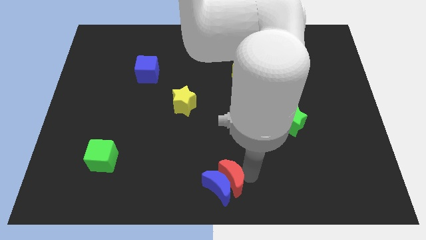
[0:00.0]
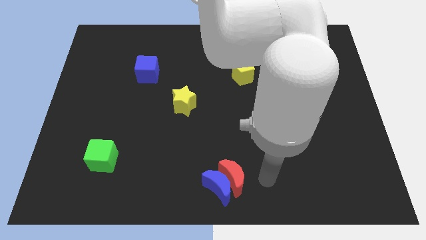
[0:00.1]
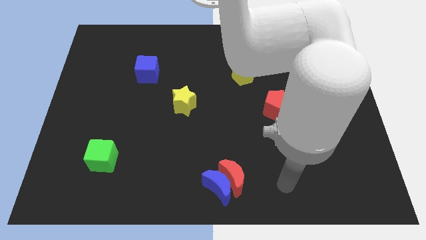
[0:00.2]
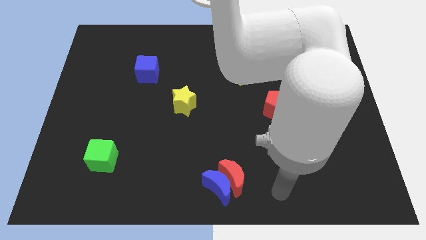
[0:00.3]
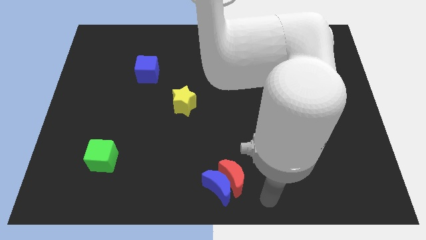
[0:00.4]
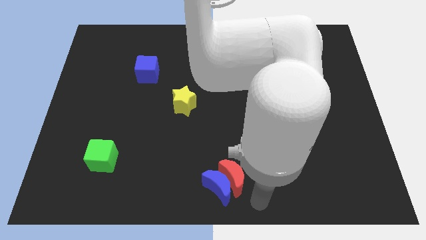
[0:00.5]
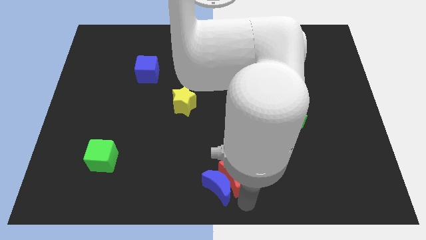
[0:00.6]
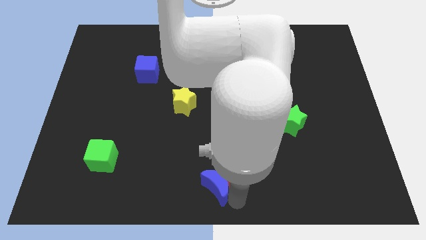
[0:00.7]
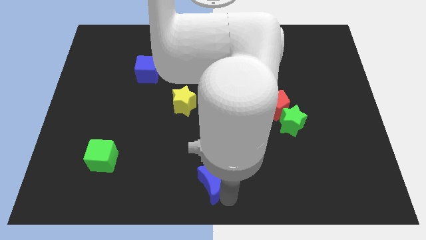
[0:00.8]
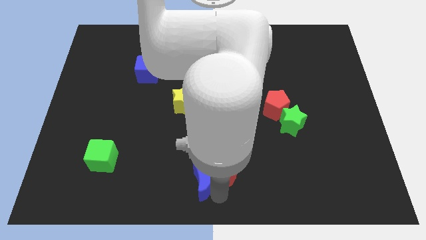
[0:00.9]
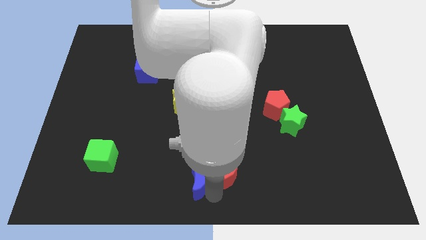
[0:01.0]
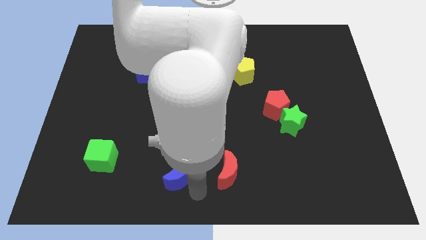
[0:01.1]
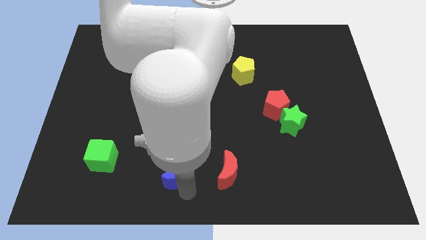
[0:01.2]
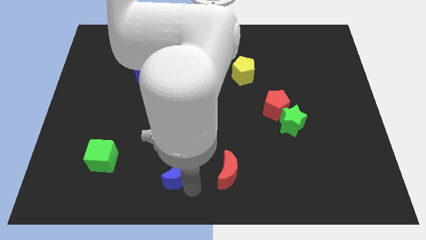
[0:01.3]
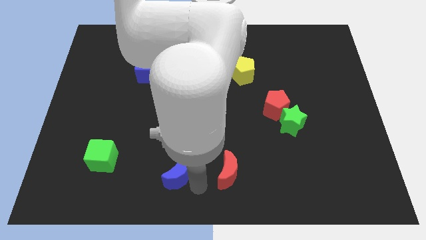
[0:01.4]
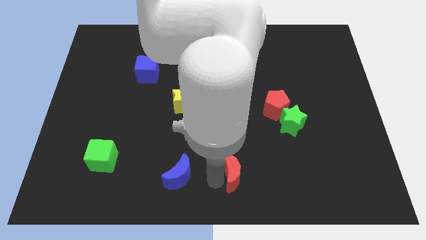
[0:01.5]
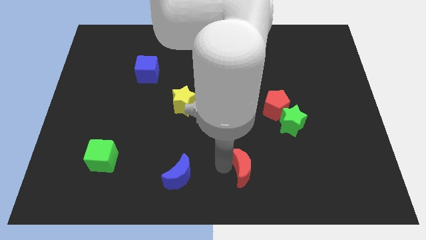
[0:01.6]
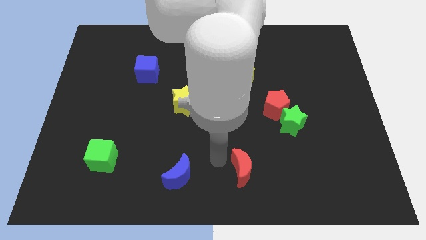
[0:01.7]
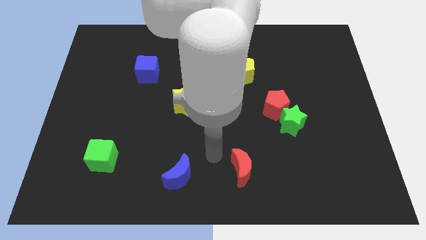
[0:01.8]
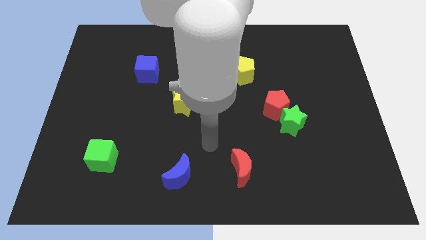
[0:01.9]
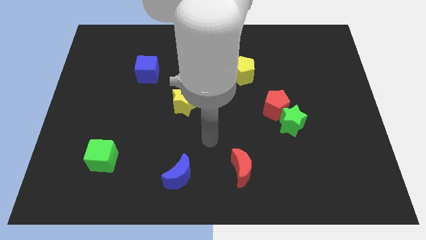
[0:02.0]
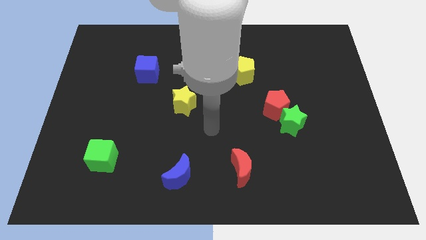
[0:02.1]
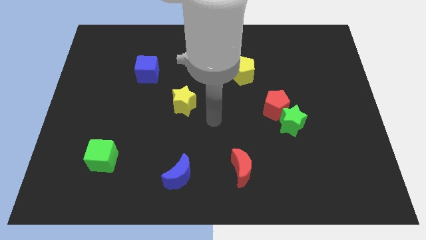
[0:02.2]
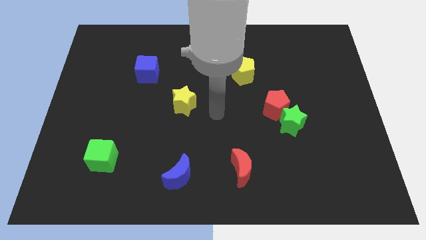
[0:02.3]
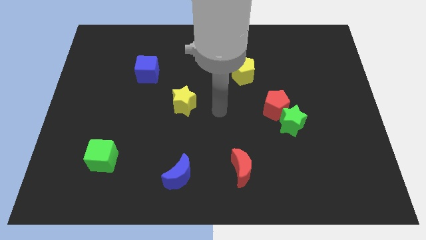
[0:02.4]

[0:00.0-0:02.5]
separate the blue moon and red moon at the bottom center

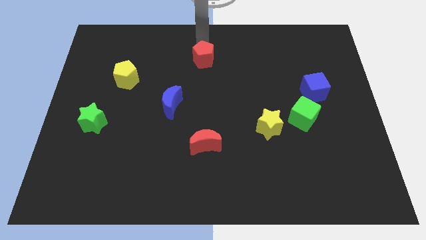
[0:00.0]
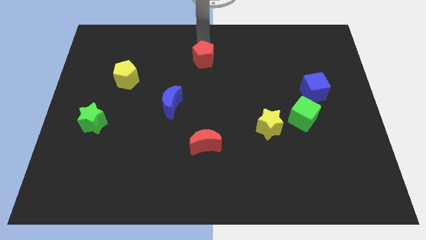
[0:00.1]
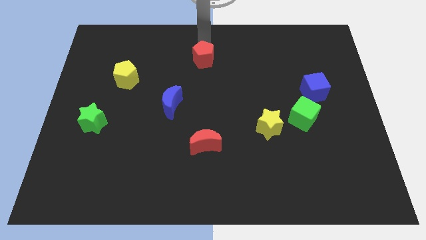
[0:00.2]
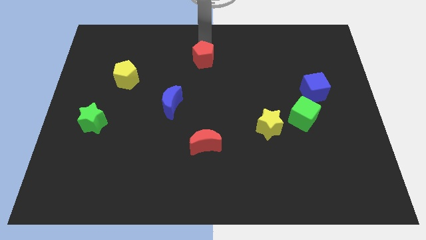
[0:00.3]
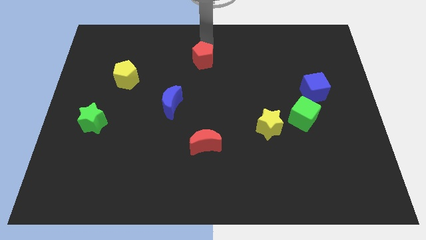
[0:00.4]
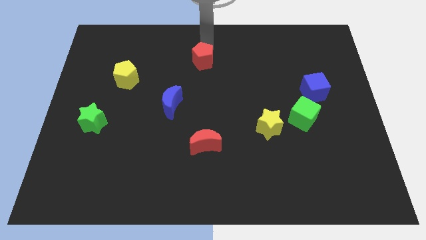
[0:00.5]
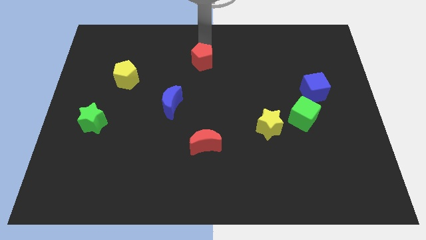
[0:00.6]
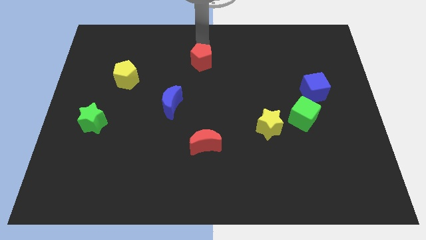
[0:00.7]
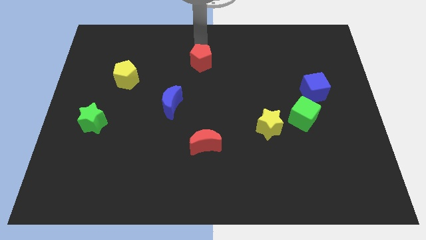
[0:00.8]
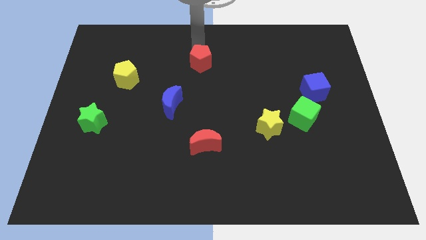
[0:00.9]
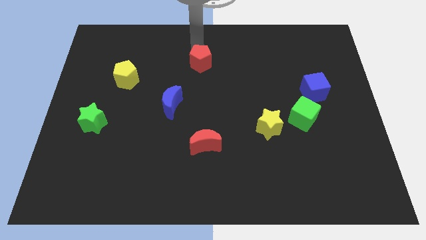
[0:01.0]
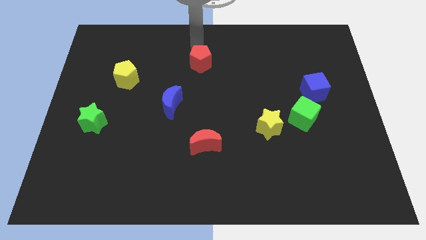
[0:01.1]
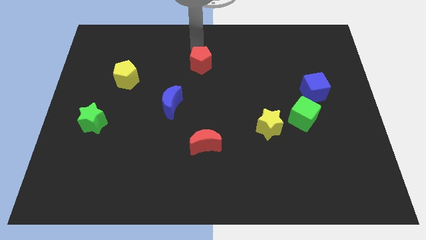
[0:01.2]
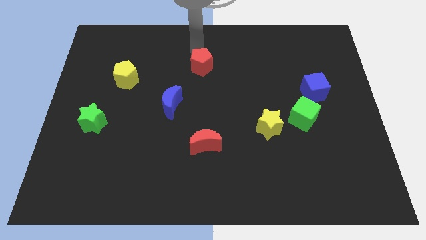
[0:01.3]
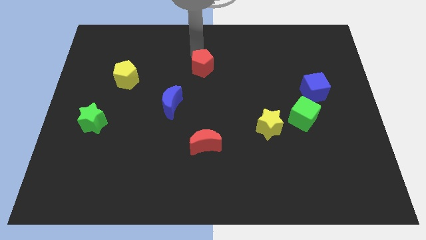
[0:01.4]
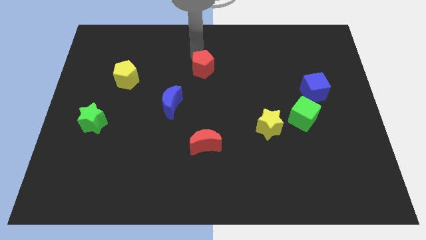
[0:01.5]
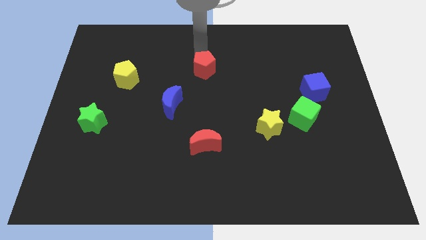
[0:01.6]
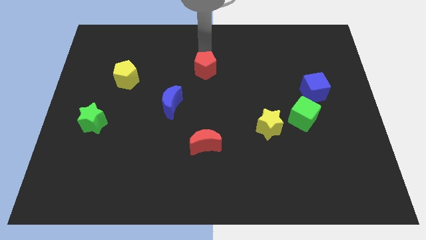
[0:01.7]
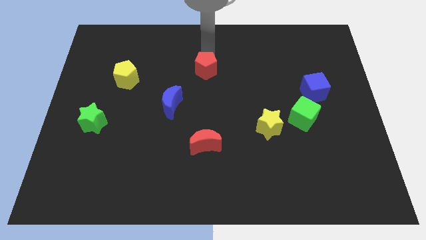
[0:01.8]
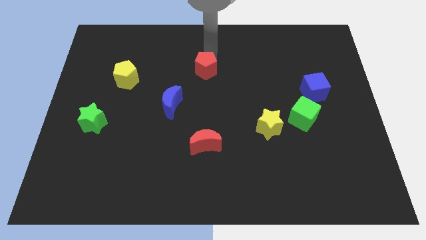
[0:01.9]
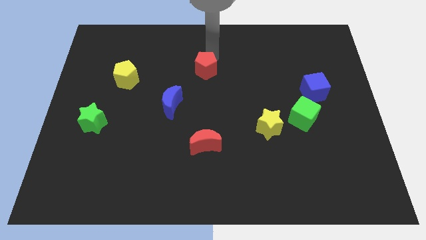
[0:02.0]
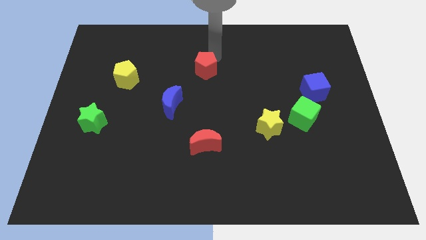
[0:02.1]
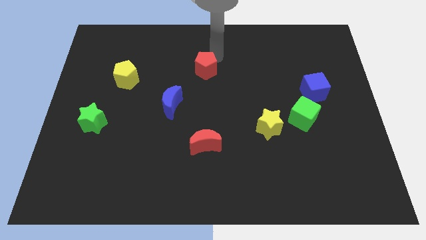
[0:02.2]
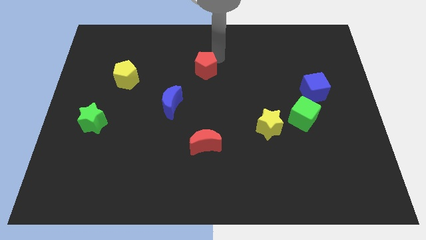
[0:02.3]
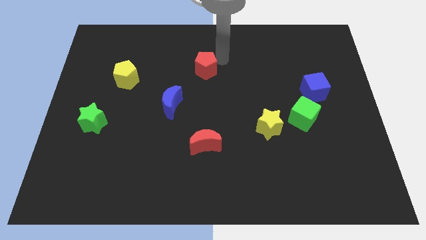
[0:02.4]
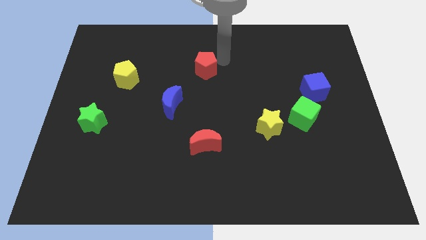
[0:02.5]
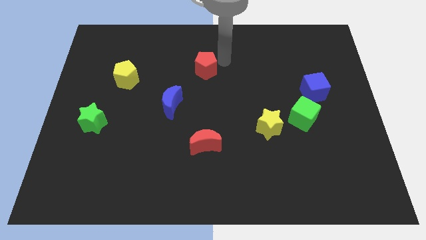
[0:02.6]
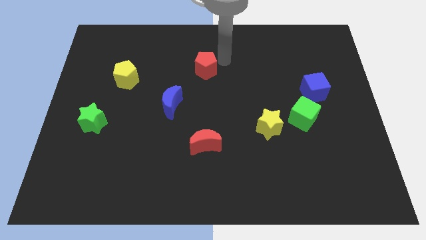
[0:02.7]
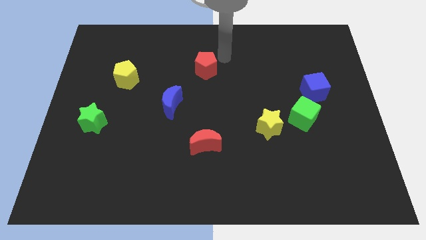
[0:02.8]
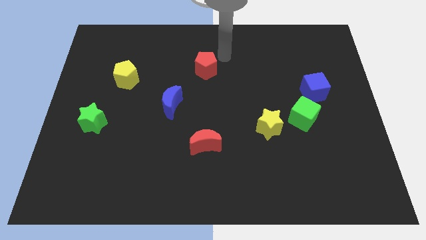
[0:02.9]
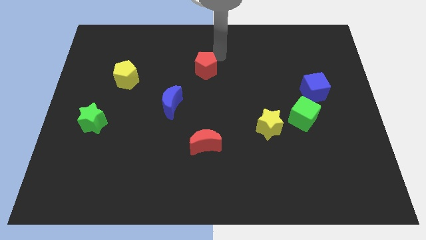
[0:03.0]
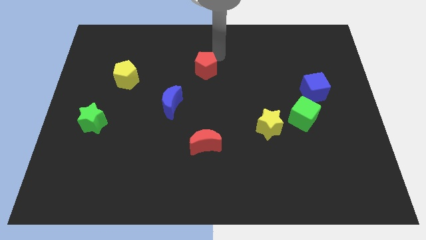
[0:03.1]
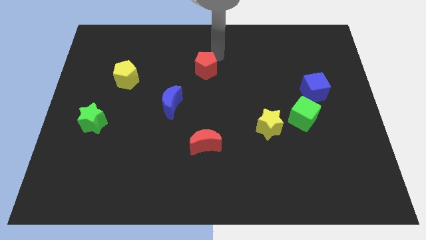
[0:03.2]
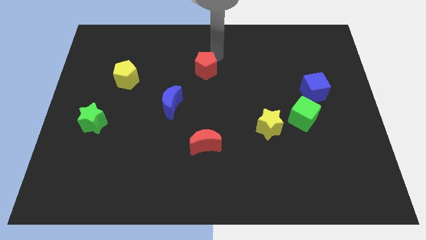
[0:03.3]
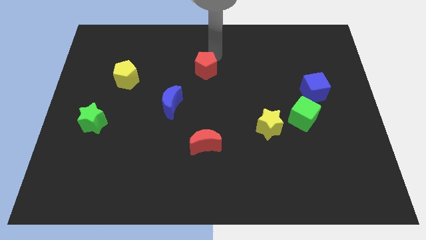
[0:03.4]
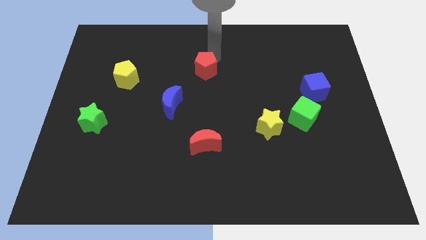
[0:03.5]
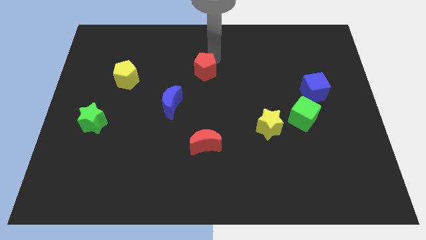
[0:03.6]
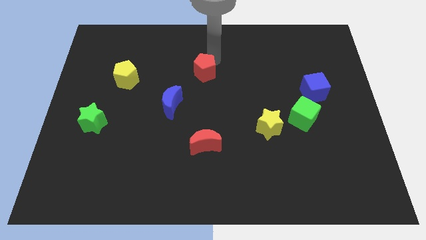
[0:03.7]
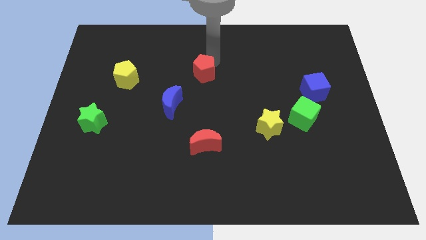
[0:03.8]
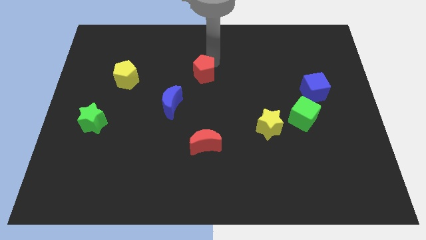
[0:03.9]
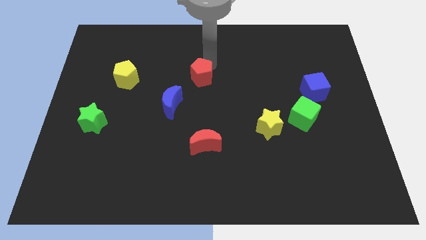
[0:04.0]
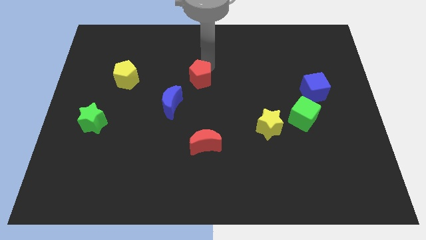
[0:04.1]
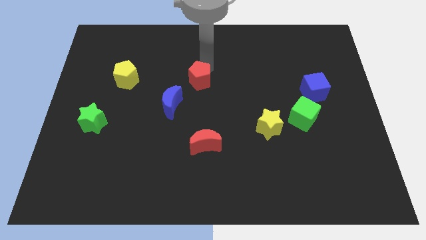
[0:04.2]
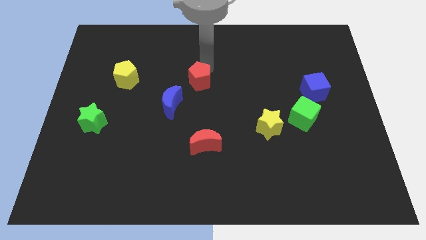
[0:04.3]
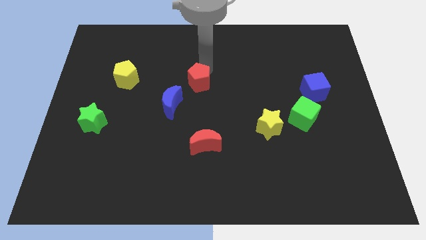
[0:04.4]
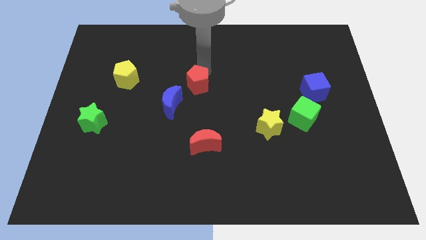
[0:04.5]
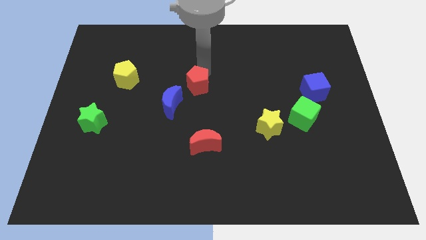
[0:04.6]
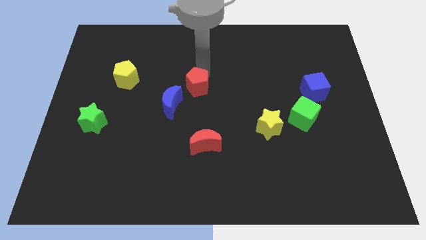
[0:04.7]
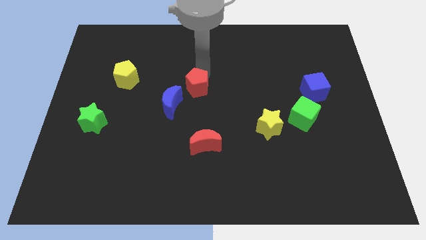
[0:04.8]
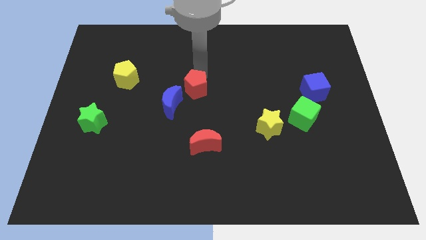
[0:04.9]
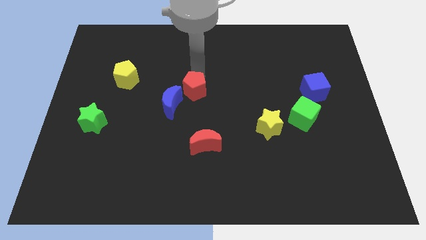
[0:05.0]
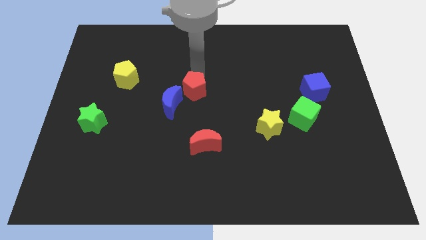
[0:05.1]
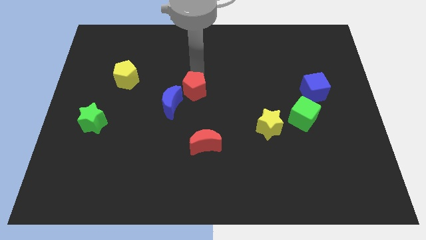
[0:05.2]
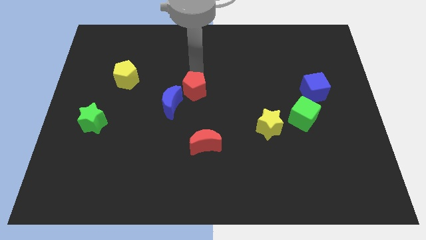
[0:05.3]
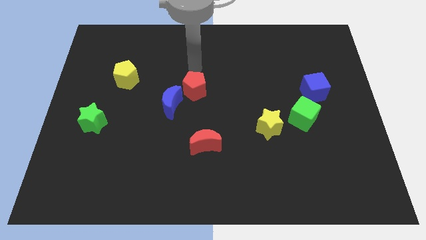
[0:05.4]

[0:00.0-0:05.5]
place the red pentagon close to the blue crescent

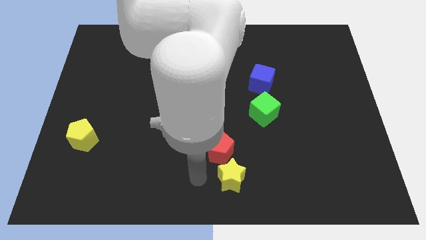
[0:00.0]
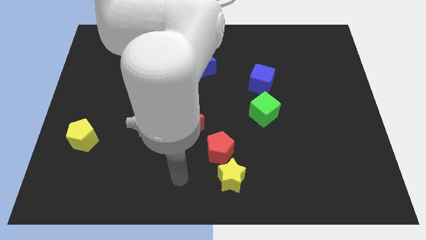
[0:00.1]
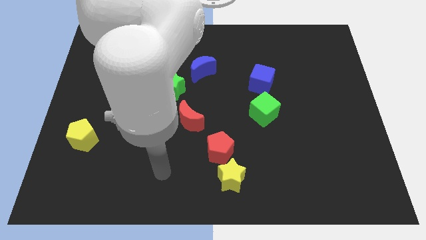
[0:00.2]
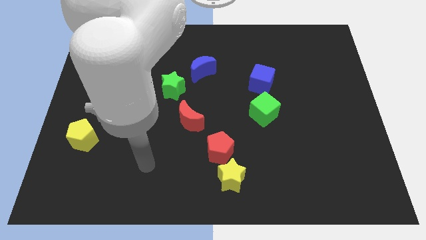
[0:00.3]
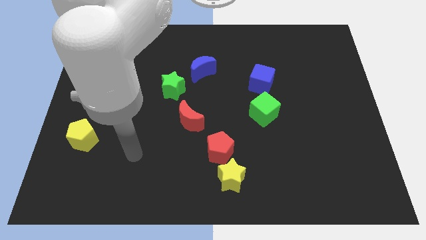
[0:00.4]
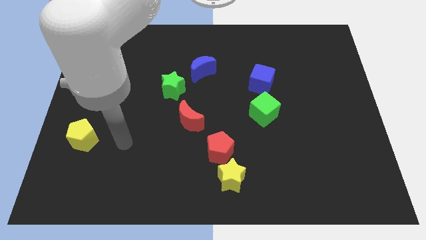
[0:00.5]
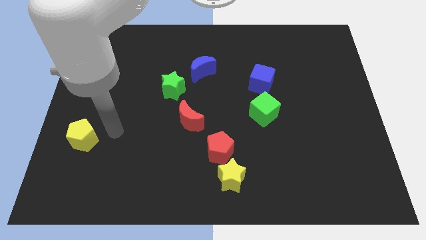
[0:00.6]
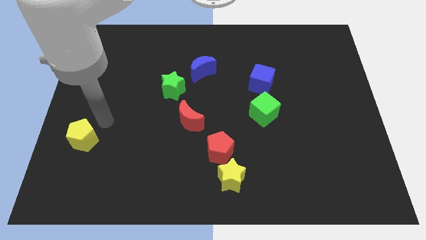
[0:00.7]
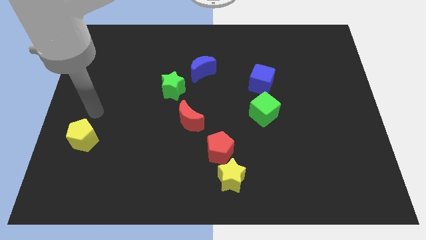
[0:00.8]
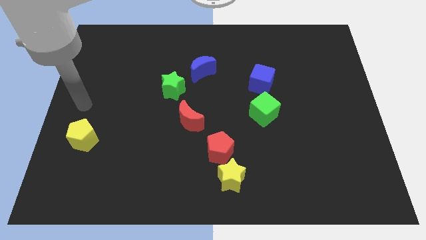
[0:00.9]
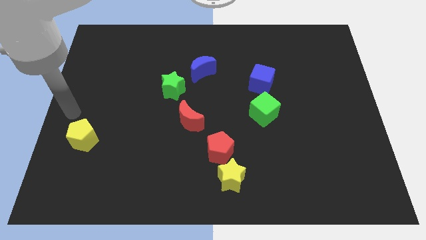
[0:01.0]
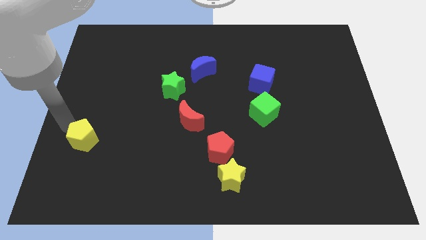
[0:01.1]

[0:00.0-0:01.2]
move your arm to the top of the yellow pentagon
